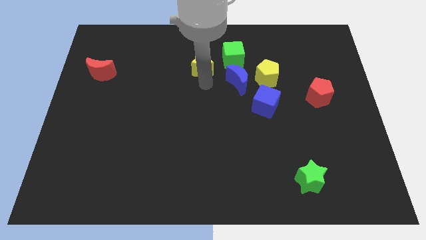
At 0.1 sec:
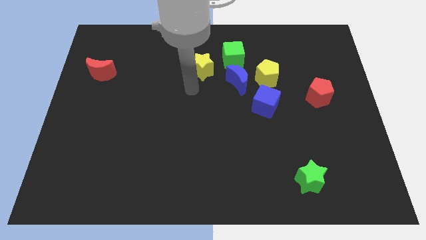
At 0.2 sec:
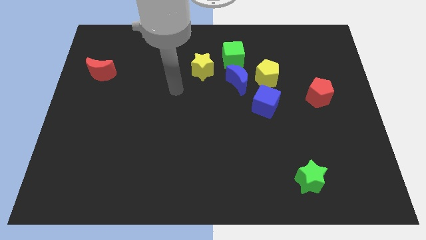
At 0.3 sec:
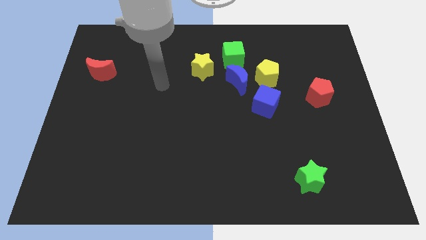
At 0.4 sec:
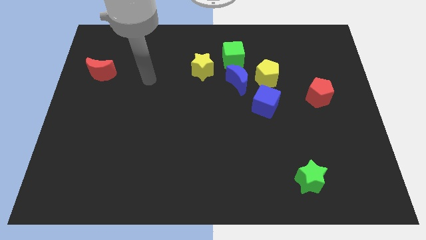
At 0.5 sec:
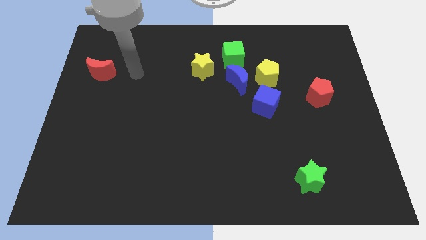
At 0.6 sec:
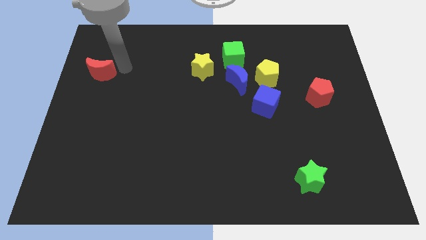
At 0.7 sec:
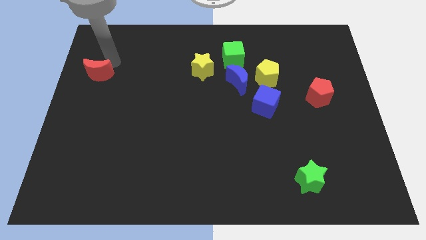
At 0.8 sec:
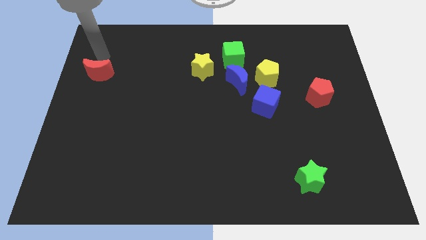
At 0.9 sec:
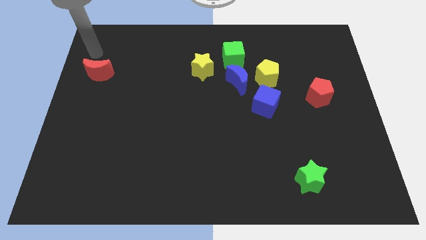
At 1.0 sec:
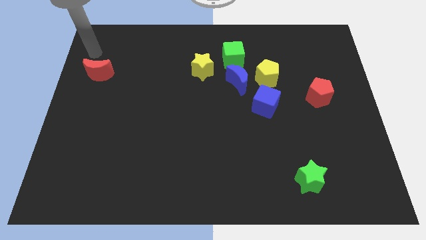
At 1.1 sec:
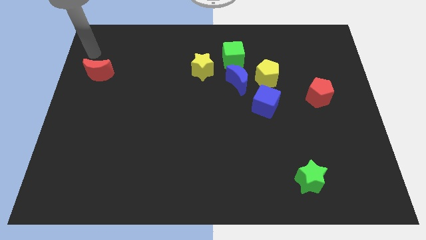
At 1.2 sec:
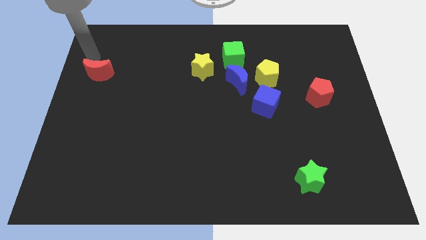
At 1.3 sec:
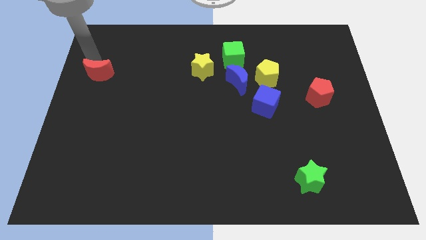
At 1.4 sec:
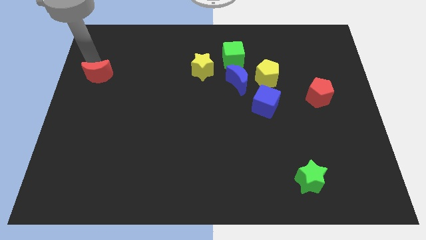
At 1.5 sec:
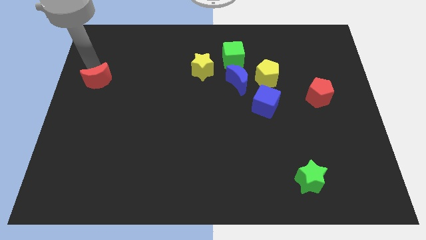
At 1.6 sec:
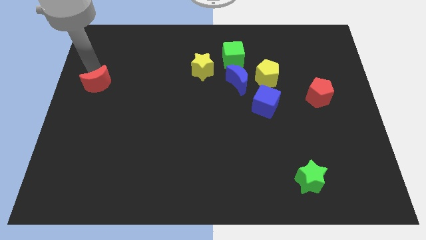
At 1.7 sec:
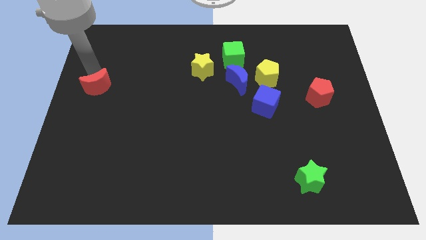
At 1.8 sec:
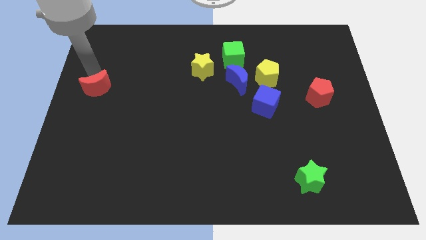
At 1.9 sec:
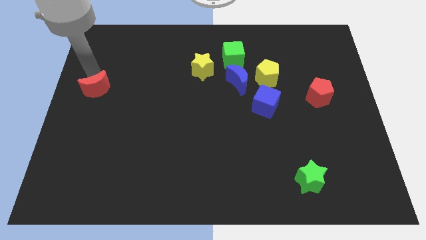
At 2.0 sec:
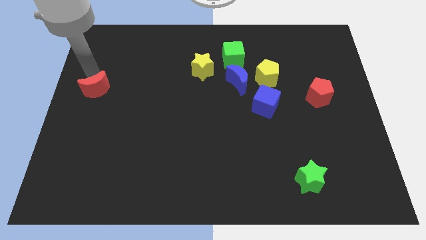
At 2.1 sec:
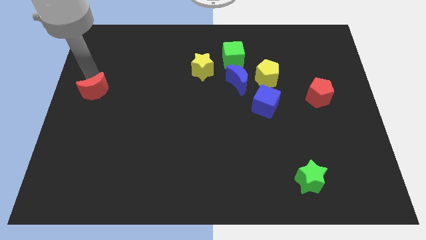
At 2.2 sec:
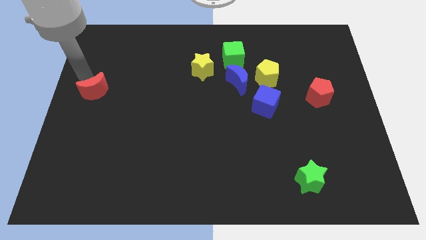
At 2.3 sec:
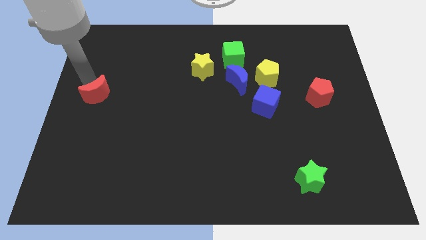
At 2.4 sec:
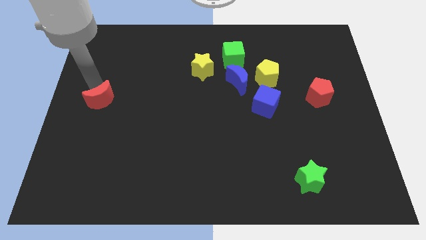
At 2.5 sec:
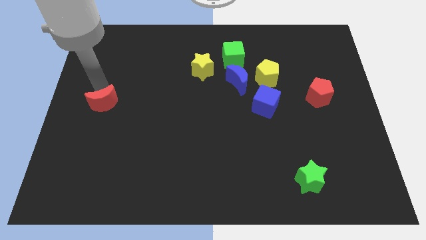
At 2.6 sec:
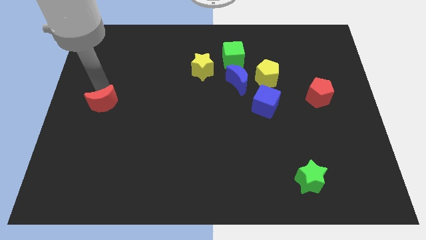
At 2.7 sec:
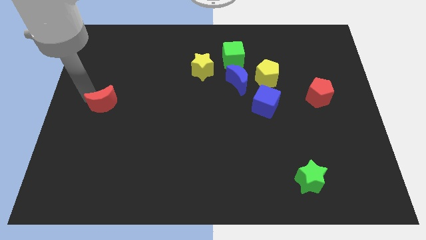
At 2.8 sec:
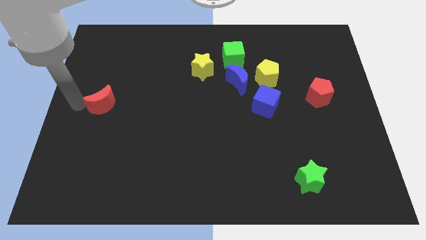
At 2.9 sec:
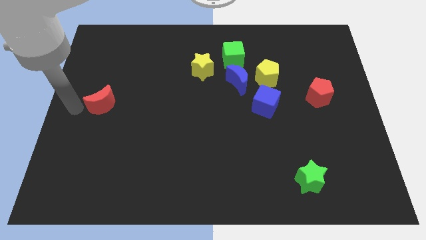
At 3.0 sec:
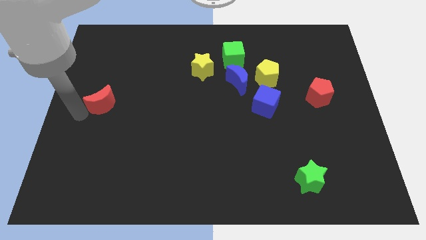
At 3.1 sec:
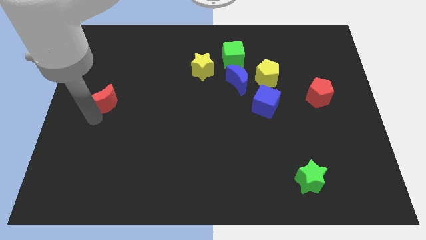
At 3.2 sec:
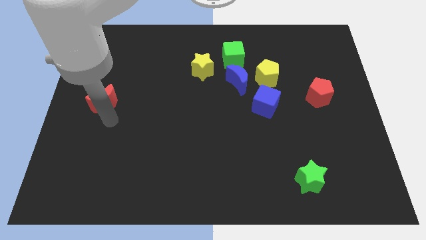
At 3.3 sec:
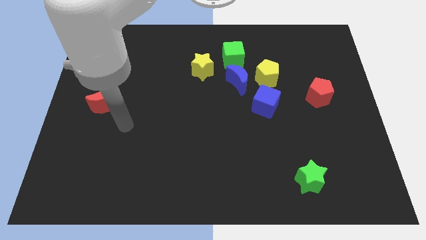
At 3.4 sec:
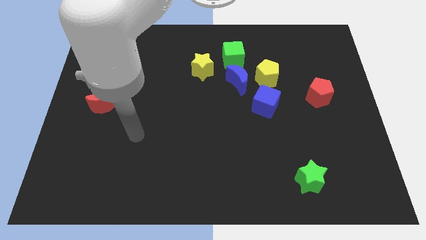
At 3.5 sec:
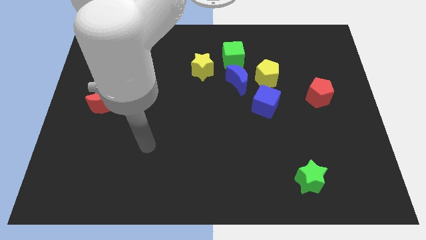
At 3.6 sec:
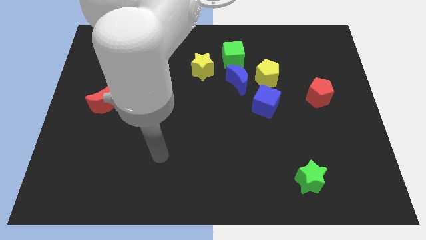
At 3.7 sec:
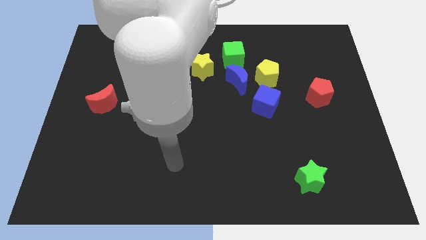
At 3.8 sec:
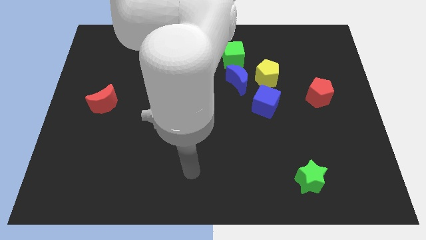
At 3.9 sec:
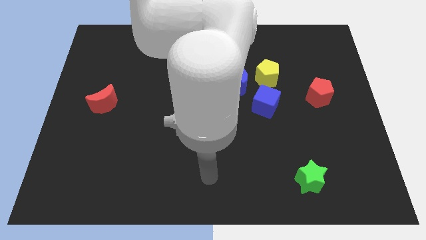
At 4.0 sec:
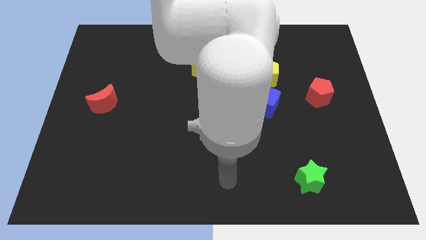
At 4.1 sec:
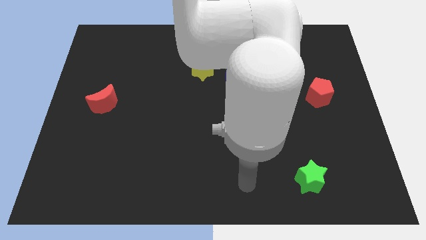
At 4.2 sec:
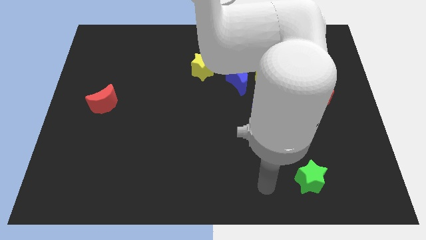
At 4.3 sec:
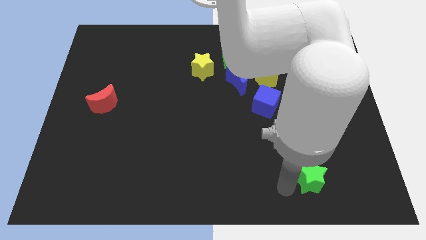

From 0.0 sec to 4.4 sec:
place the red crescent to the left of the blue cube

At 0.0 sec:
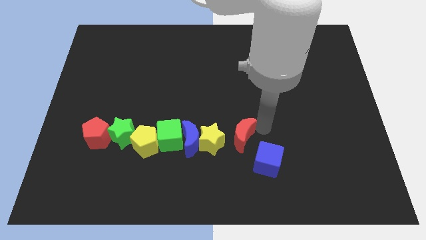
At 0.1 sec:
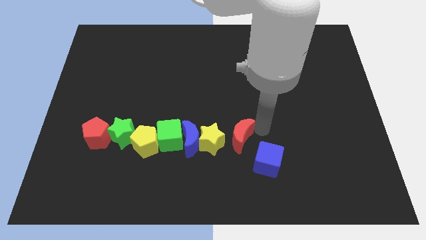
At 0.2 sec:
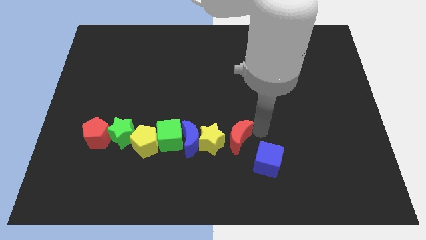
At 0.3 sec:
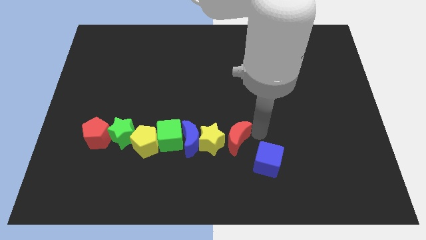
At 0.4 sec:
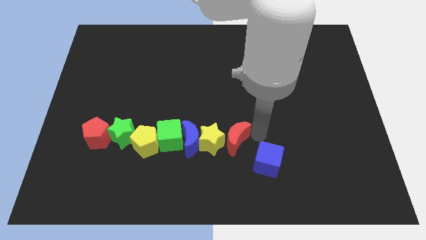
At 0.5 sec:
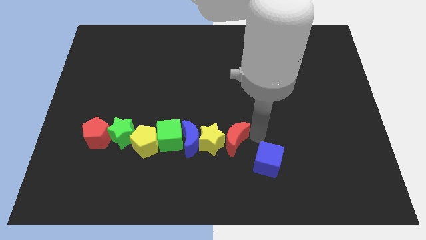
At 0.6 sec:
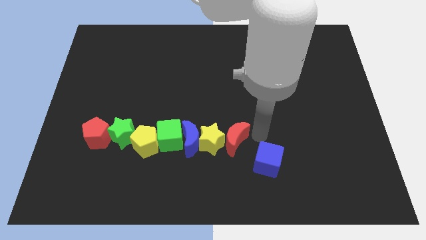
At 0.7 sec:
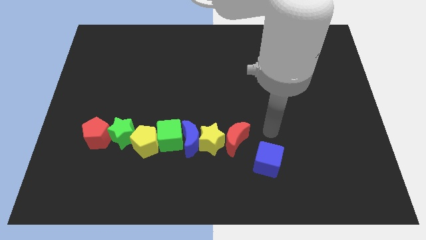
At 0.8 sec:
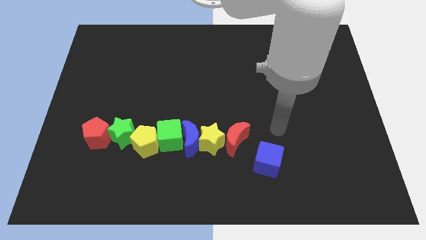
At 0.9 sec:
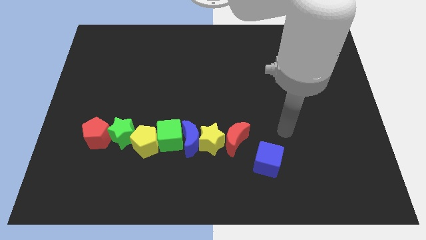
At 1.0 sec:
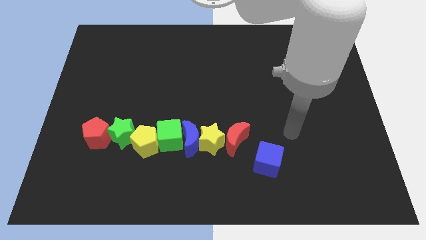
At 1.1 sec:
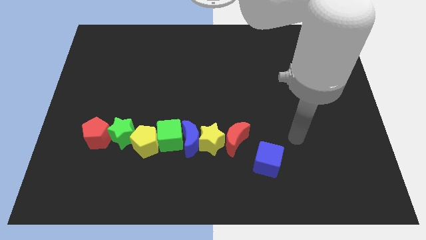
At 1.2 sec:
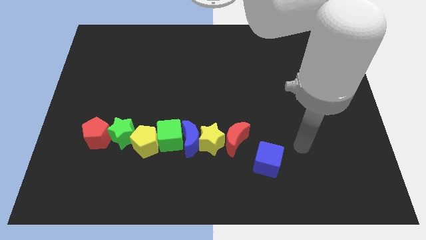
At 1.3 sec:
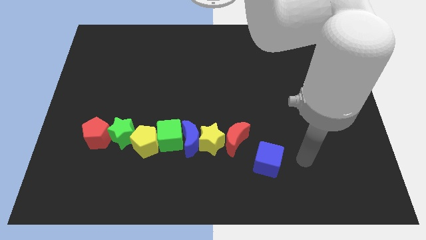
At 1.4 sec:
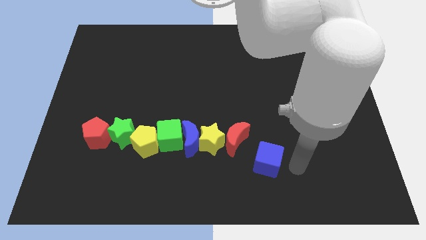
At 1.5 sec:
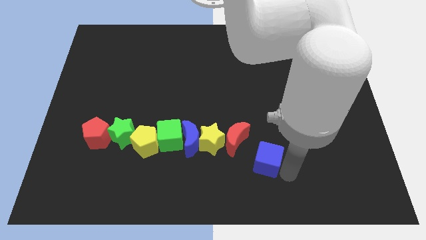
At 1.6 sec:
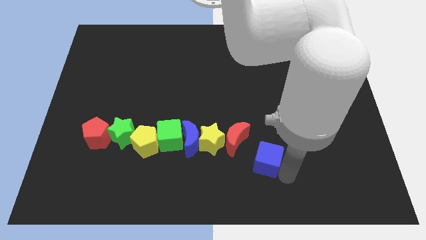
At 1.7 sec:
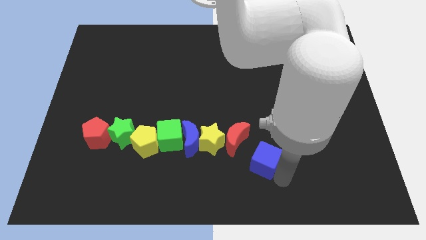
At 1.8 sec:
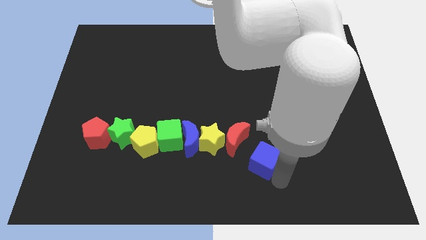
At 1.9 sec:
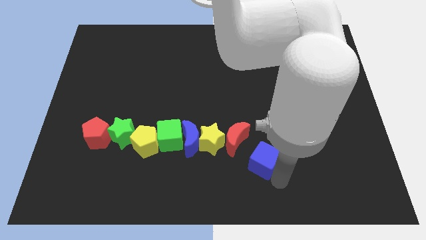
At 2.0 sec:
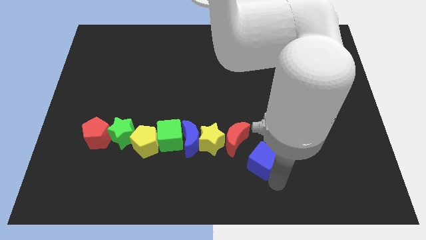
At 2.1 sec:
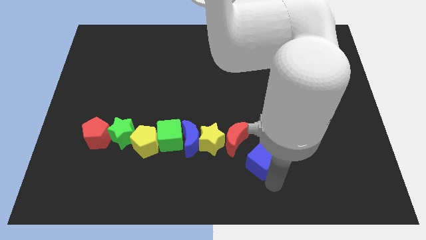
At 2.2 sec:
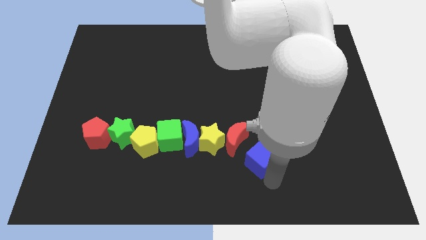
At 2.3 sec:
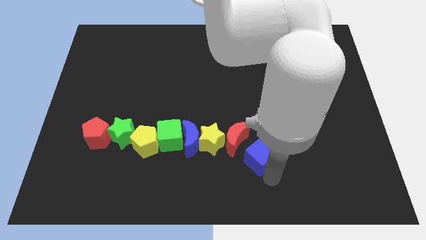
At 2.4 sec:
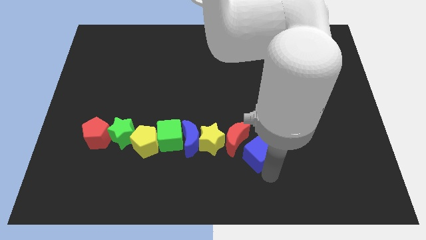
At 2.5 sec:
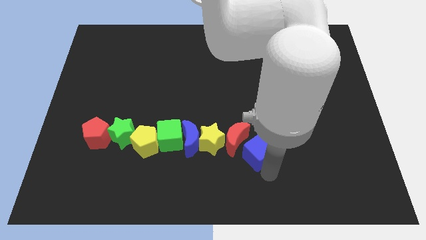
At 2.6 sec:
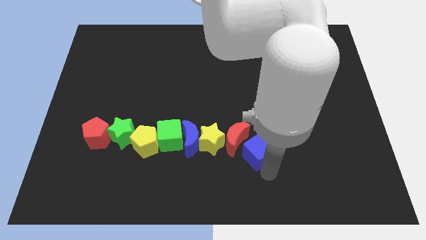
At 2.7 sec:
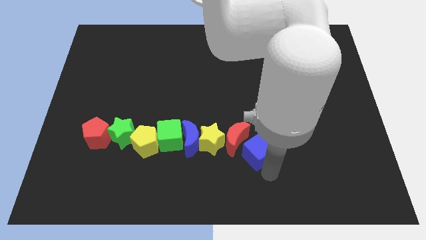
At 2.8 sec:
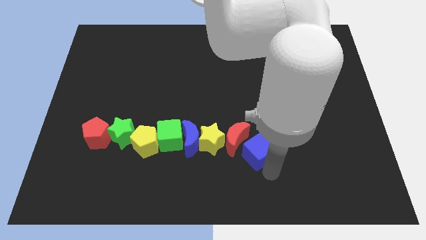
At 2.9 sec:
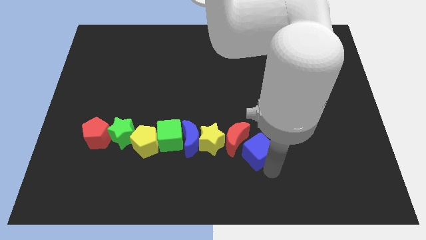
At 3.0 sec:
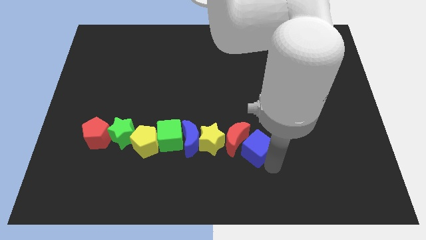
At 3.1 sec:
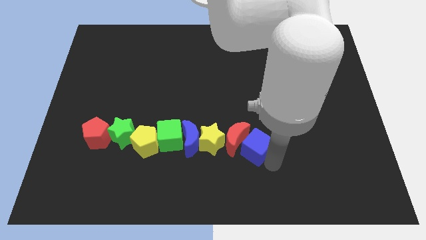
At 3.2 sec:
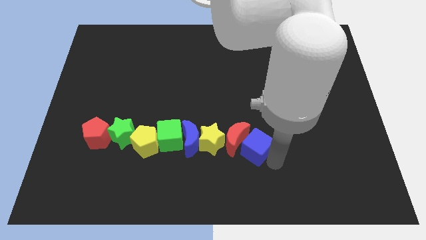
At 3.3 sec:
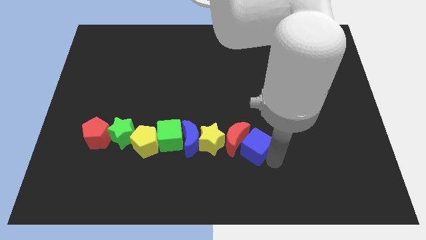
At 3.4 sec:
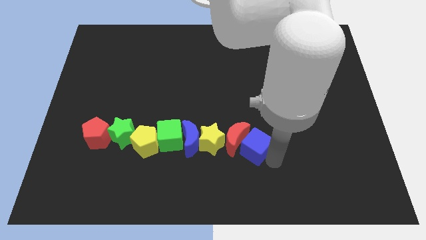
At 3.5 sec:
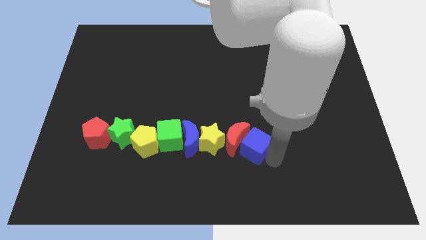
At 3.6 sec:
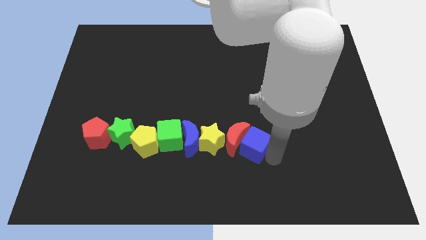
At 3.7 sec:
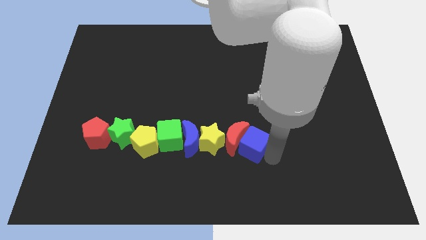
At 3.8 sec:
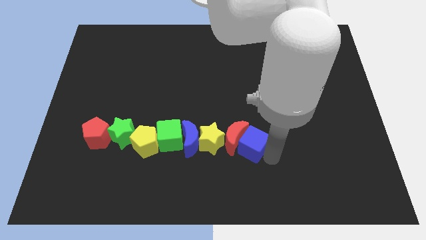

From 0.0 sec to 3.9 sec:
push the blue cube into the red moon

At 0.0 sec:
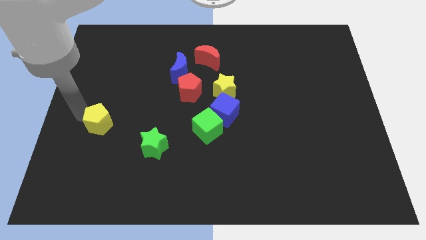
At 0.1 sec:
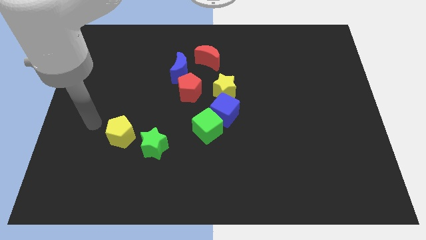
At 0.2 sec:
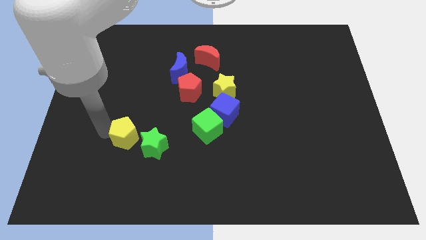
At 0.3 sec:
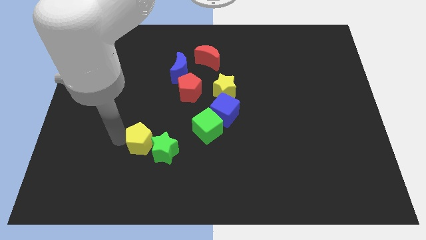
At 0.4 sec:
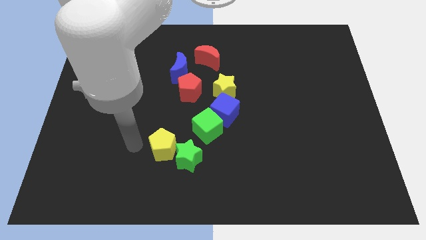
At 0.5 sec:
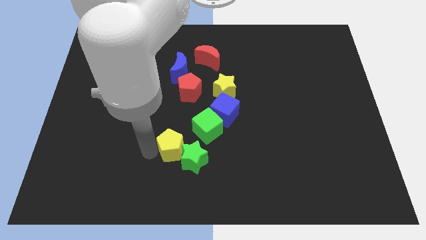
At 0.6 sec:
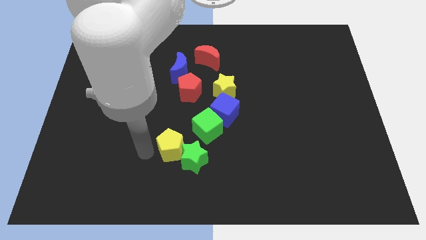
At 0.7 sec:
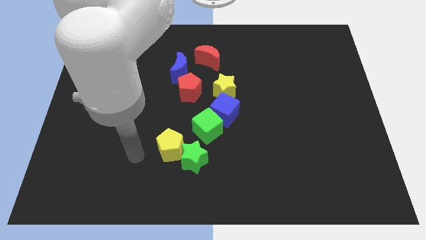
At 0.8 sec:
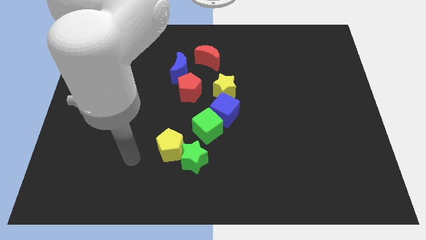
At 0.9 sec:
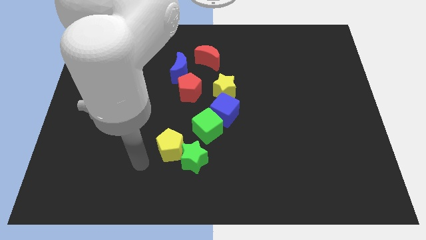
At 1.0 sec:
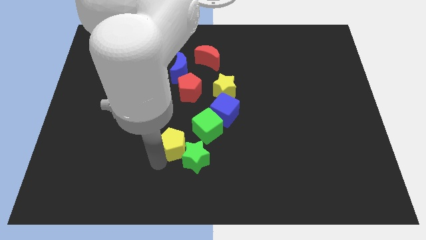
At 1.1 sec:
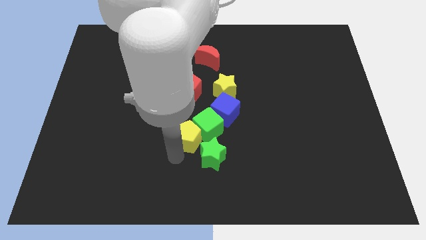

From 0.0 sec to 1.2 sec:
push the yellow pentagon into the green star
